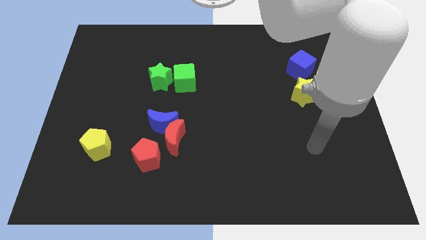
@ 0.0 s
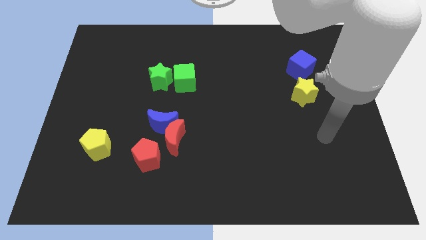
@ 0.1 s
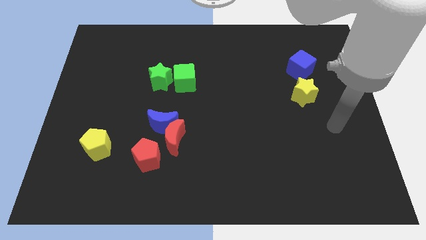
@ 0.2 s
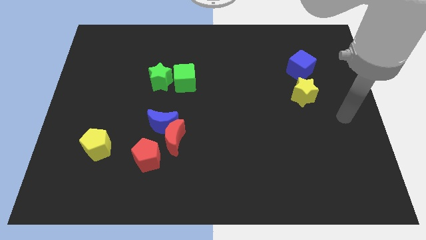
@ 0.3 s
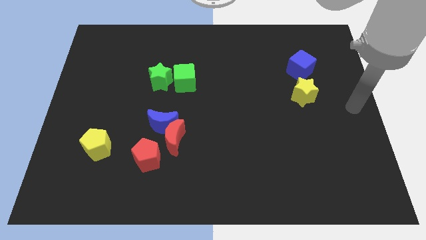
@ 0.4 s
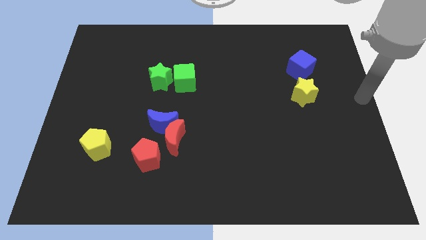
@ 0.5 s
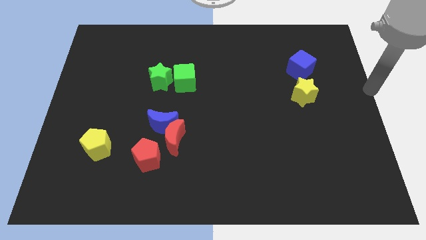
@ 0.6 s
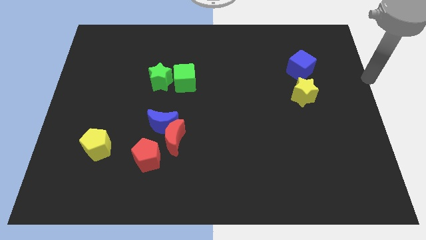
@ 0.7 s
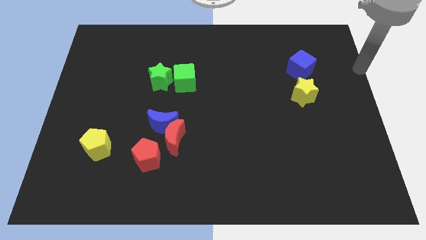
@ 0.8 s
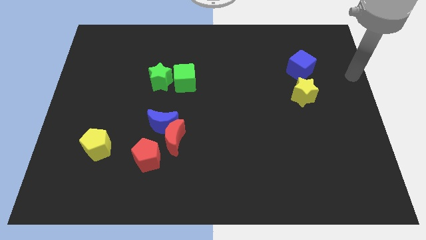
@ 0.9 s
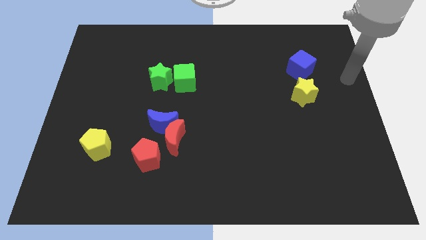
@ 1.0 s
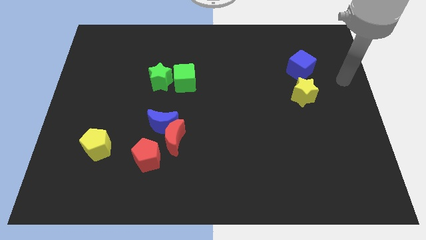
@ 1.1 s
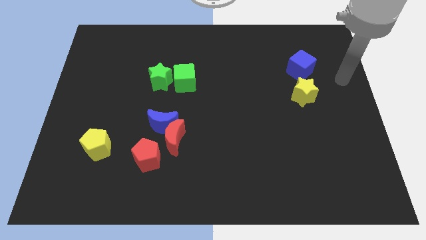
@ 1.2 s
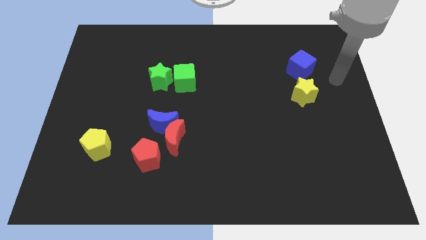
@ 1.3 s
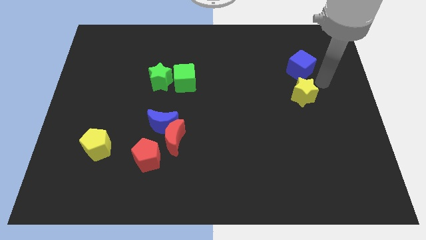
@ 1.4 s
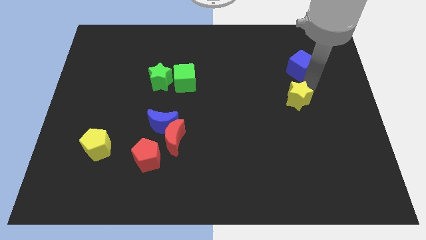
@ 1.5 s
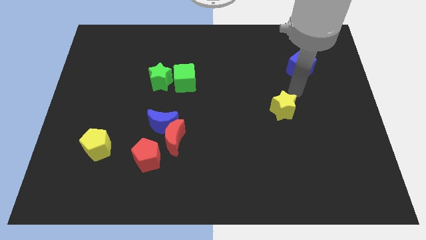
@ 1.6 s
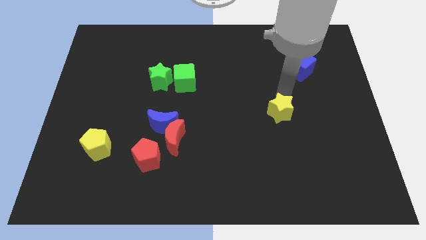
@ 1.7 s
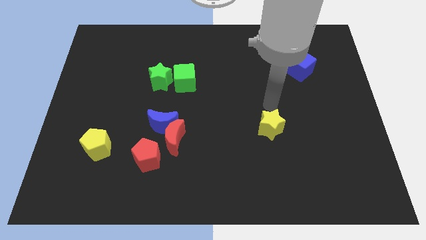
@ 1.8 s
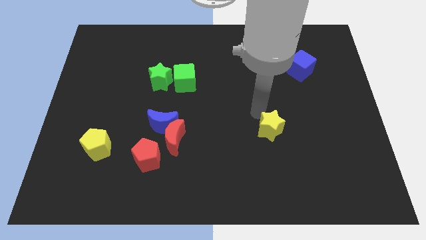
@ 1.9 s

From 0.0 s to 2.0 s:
push the yellow star towards the bottom side

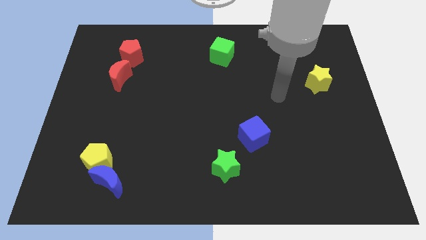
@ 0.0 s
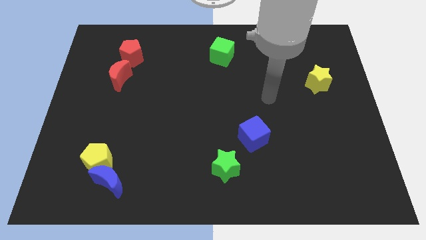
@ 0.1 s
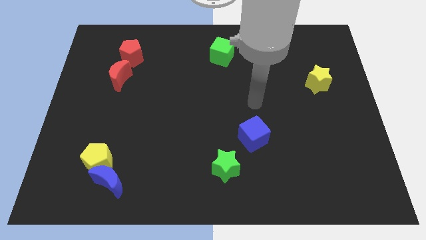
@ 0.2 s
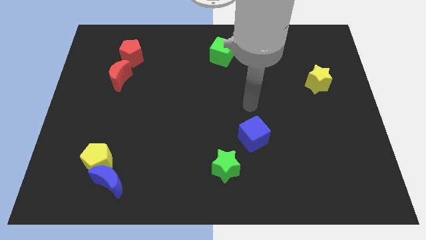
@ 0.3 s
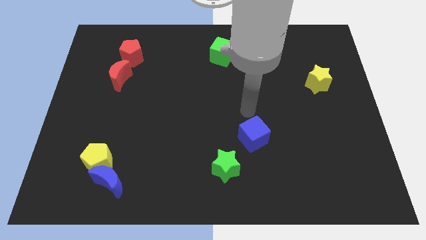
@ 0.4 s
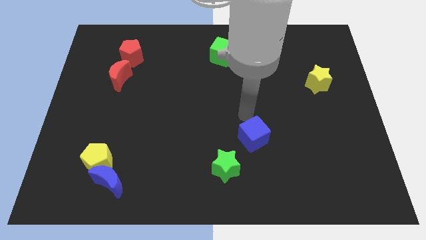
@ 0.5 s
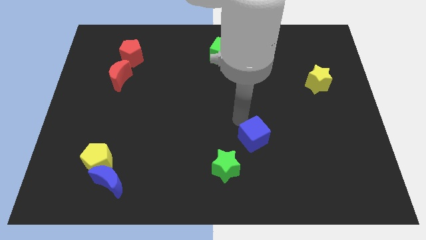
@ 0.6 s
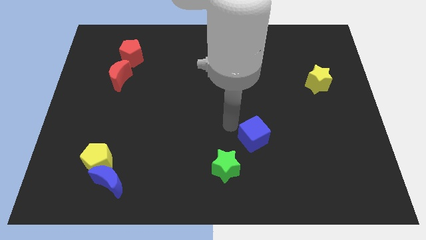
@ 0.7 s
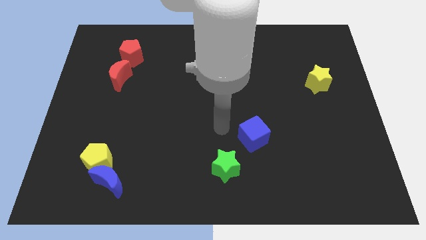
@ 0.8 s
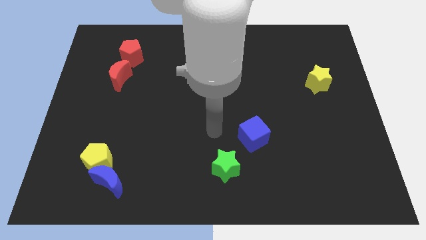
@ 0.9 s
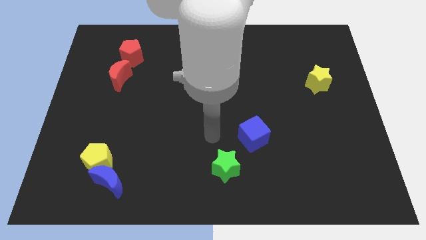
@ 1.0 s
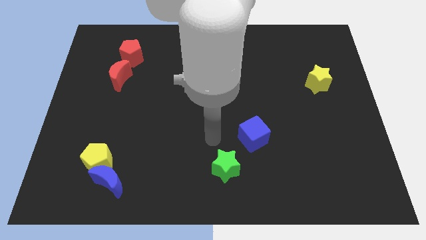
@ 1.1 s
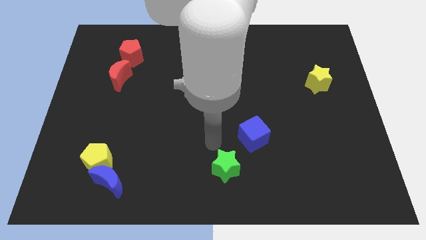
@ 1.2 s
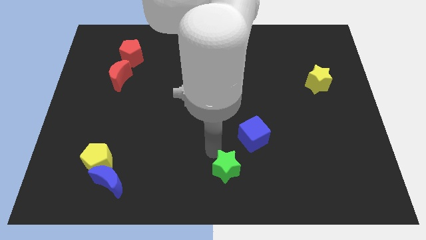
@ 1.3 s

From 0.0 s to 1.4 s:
place the arm above the green star

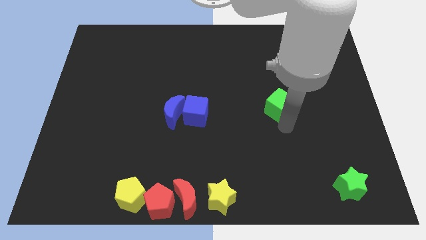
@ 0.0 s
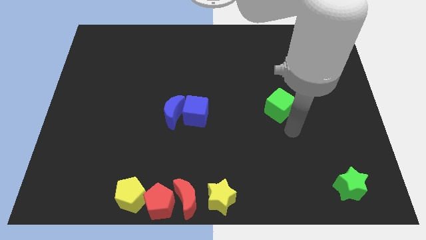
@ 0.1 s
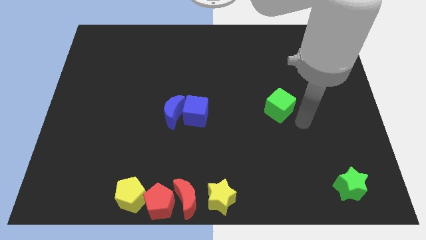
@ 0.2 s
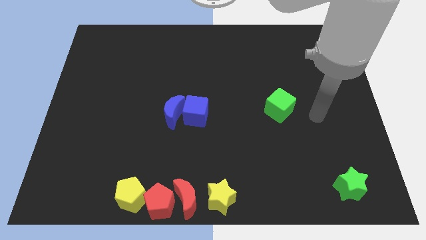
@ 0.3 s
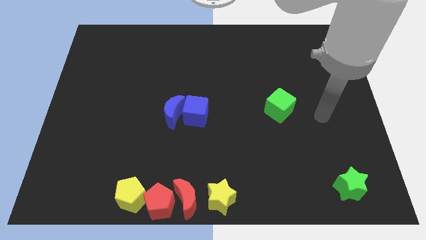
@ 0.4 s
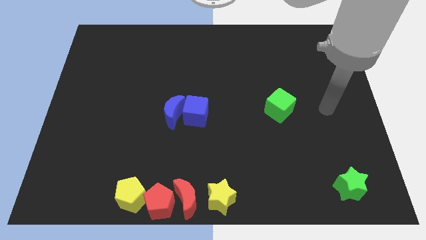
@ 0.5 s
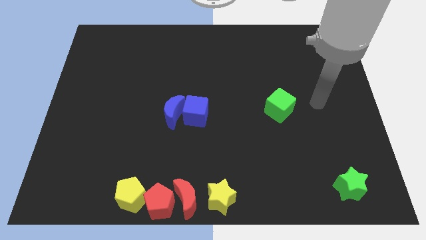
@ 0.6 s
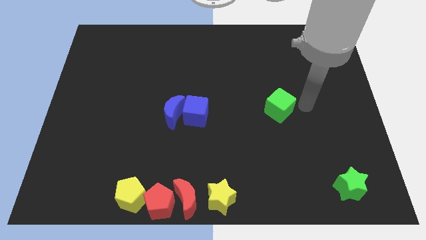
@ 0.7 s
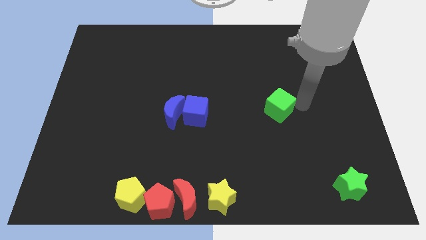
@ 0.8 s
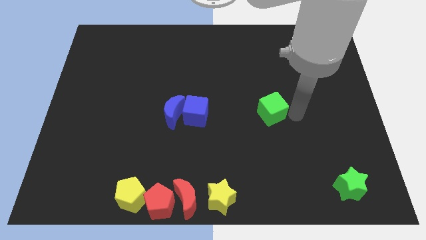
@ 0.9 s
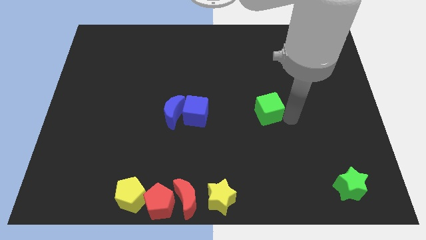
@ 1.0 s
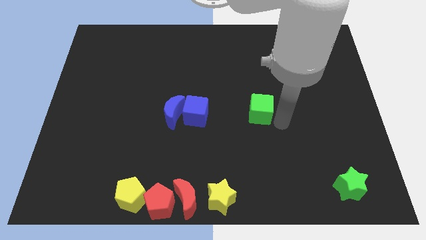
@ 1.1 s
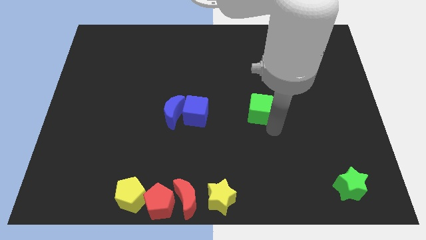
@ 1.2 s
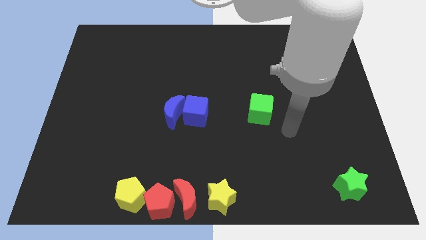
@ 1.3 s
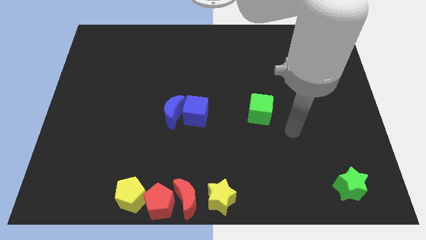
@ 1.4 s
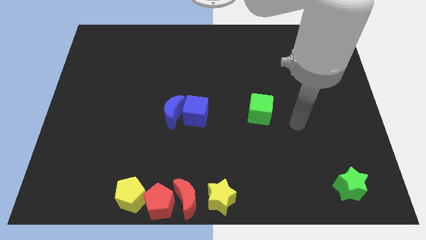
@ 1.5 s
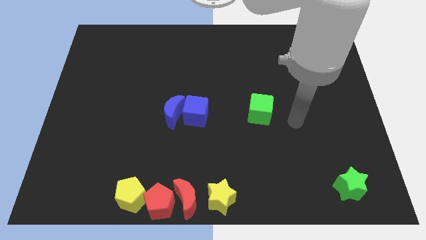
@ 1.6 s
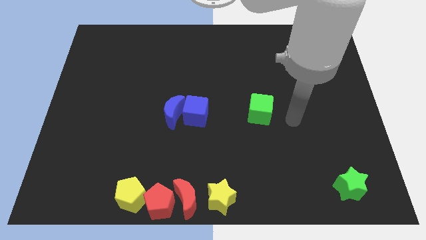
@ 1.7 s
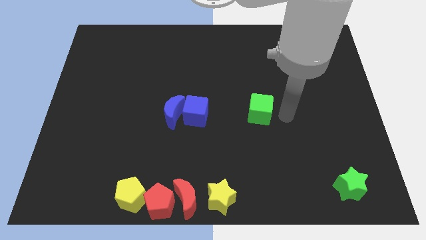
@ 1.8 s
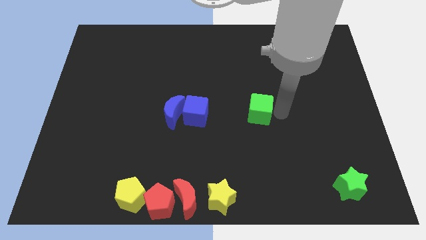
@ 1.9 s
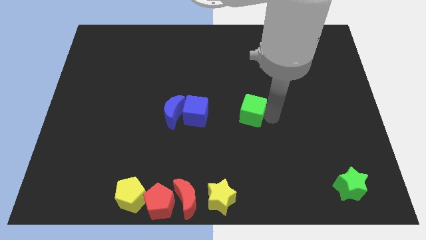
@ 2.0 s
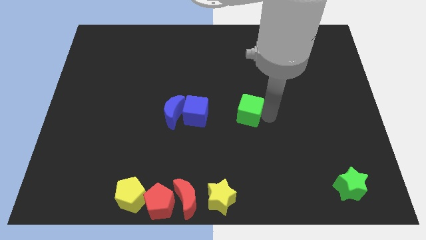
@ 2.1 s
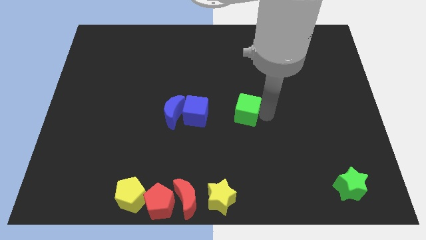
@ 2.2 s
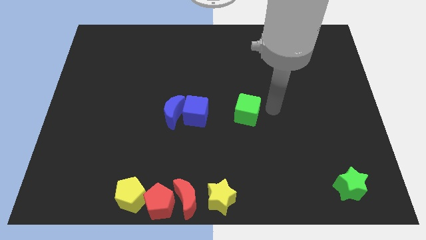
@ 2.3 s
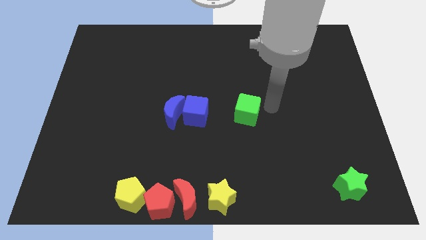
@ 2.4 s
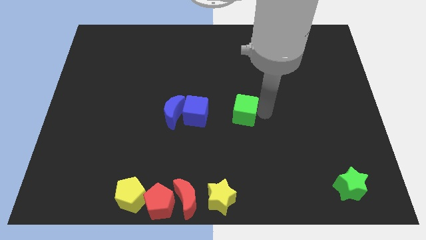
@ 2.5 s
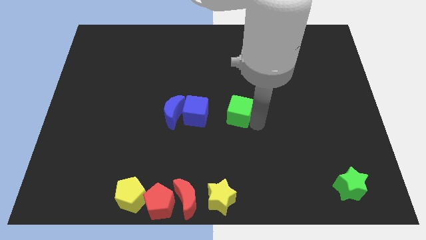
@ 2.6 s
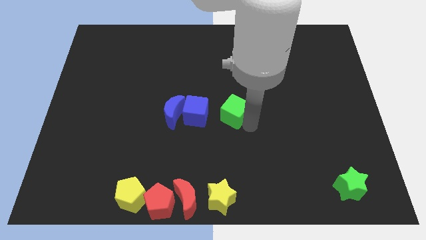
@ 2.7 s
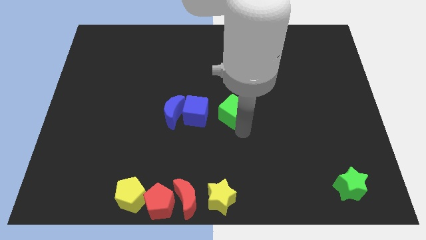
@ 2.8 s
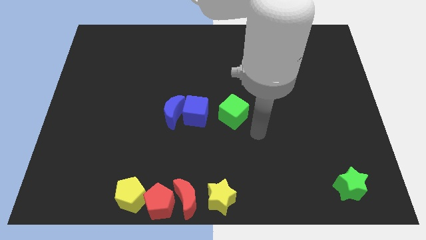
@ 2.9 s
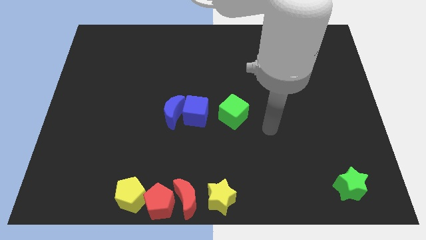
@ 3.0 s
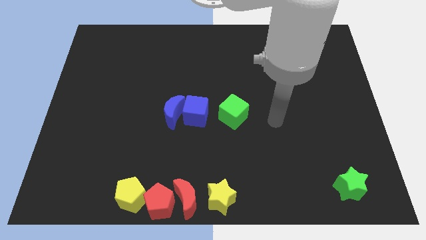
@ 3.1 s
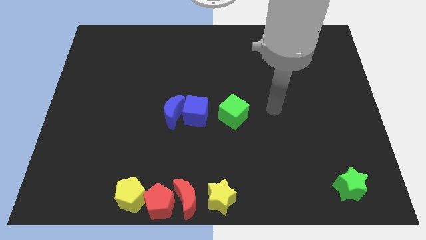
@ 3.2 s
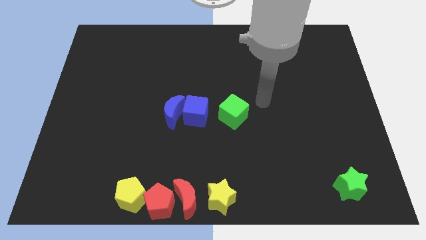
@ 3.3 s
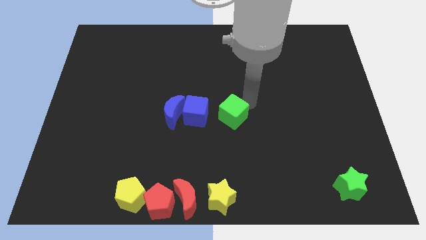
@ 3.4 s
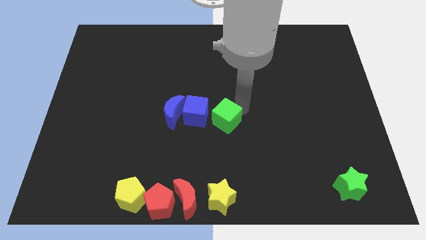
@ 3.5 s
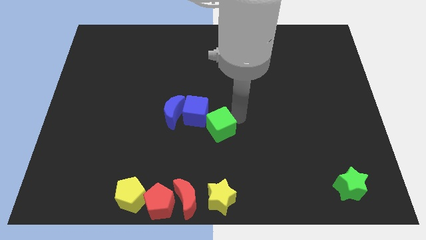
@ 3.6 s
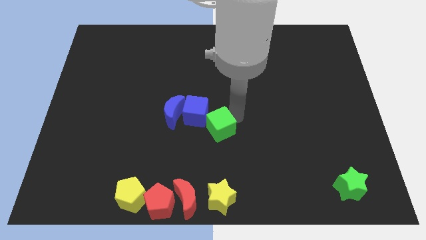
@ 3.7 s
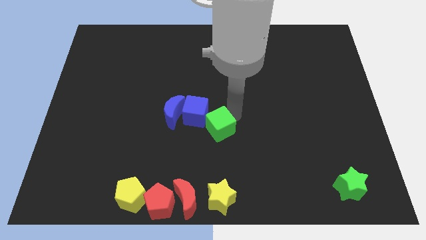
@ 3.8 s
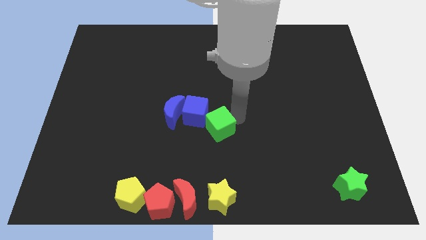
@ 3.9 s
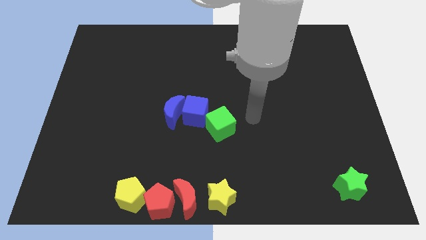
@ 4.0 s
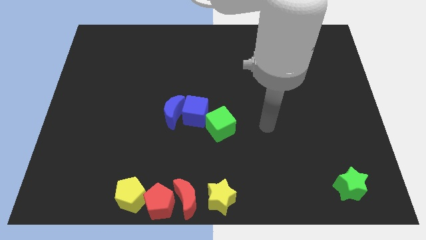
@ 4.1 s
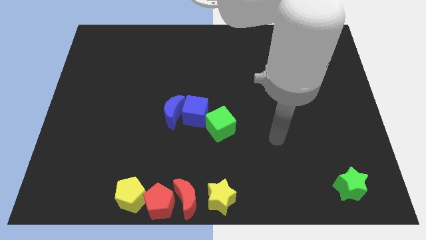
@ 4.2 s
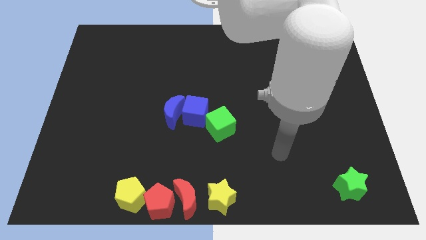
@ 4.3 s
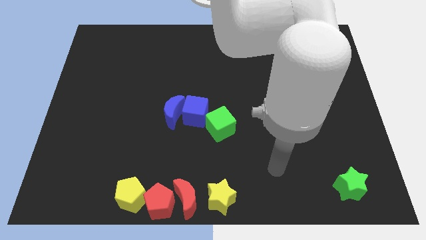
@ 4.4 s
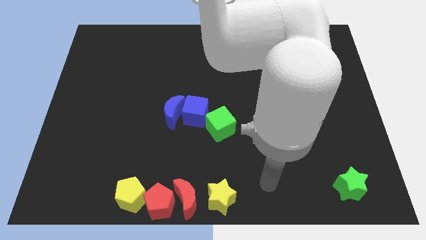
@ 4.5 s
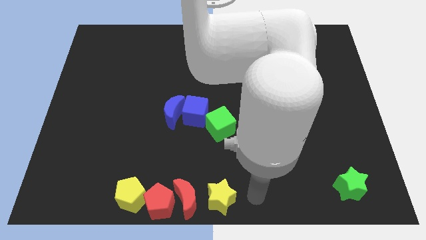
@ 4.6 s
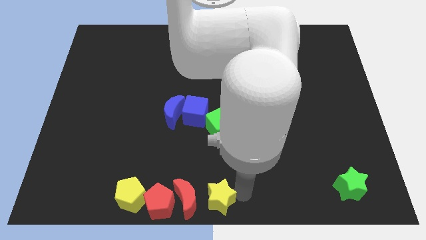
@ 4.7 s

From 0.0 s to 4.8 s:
push the green cube into the blue cube

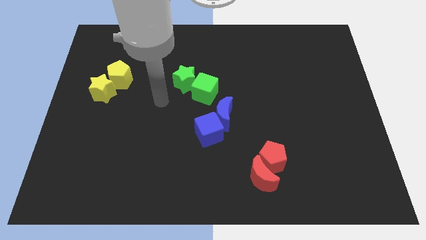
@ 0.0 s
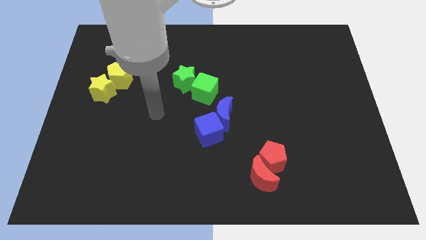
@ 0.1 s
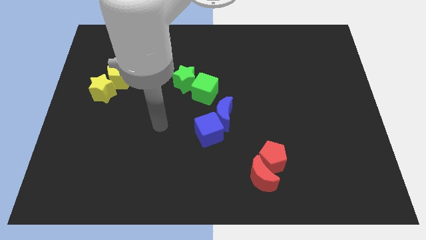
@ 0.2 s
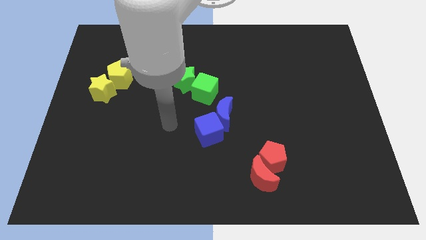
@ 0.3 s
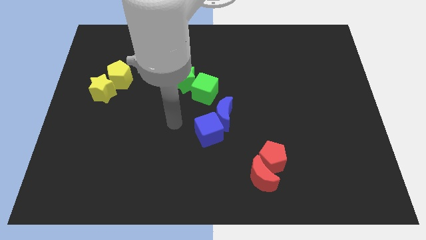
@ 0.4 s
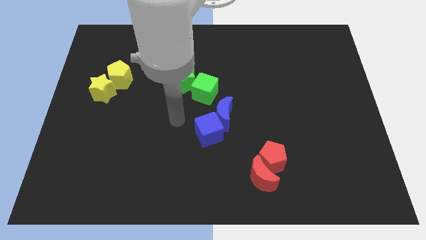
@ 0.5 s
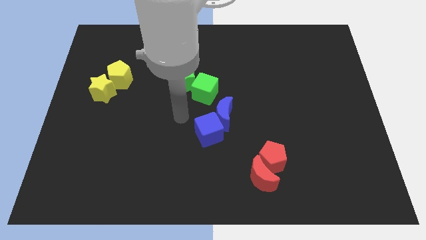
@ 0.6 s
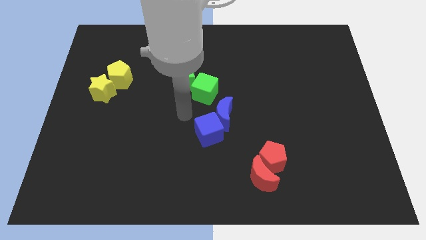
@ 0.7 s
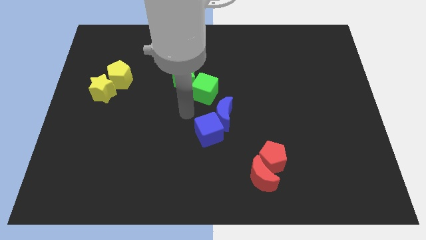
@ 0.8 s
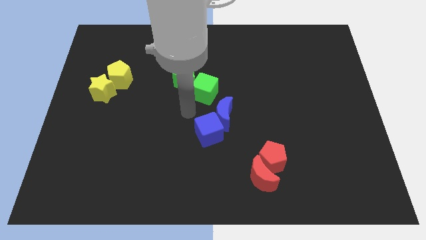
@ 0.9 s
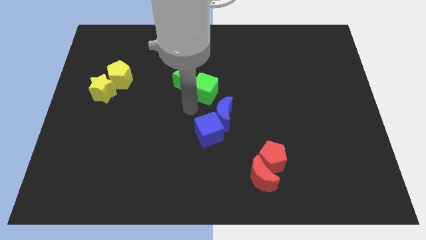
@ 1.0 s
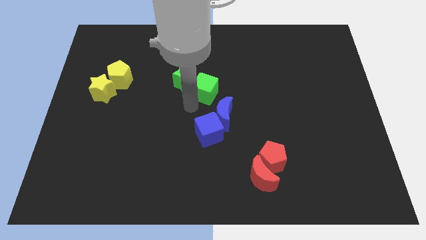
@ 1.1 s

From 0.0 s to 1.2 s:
move your arm below the green cube
